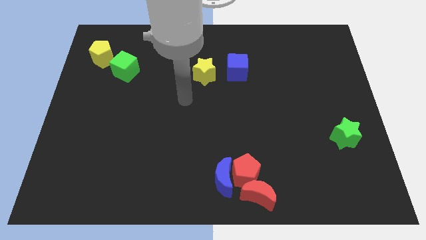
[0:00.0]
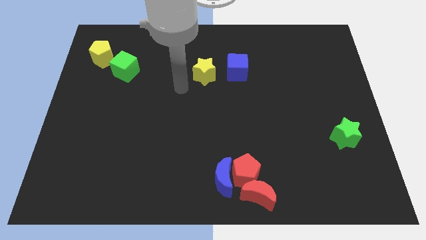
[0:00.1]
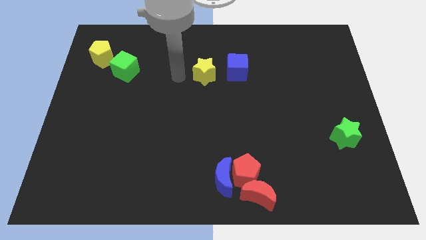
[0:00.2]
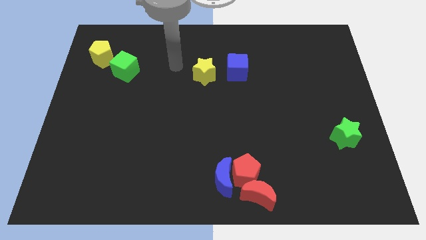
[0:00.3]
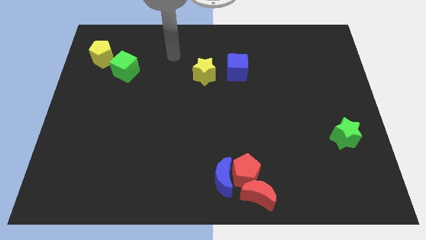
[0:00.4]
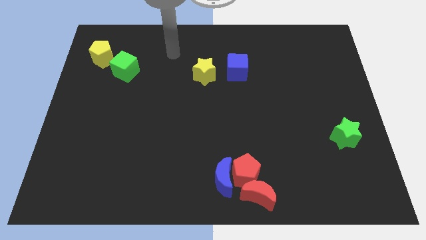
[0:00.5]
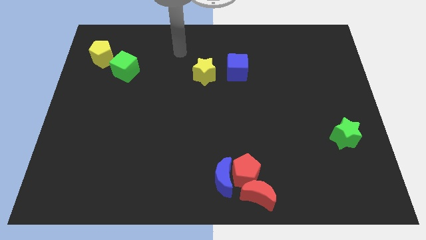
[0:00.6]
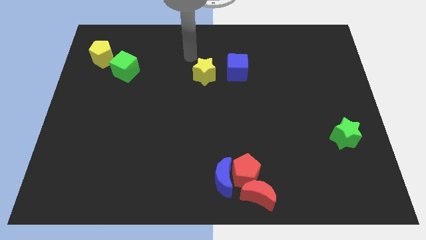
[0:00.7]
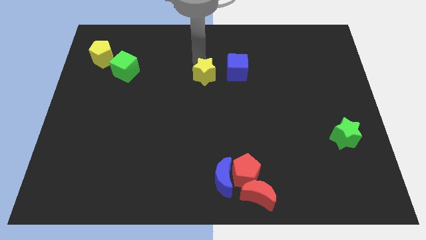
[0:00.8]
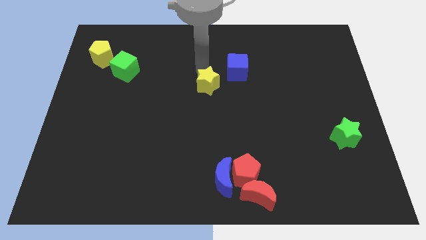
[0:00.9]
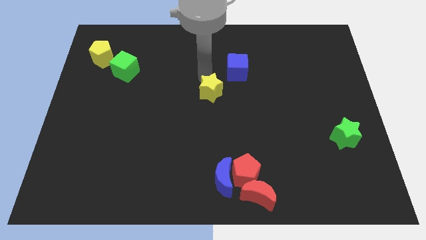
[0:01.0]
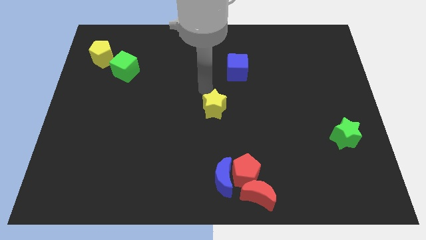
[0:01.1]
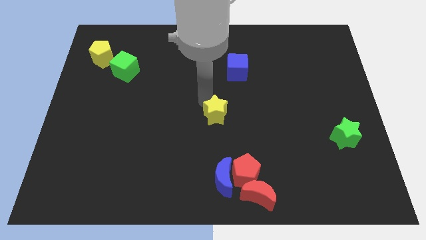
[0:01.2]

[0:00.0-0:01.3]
place a yellow star to the center of the board

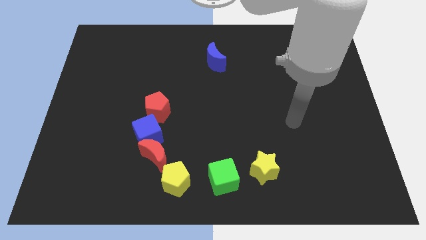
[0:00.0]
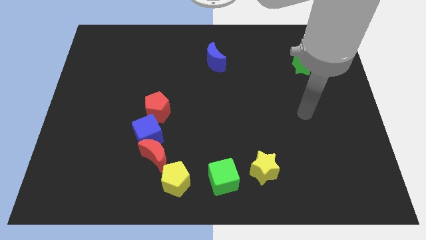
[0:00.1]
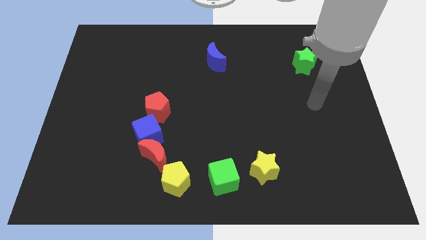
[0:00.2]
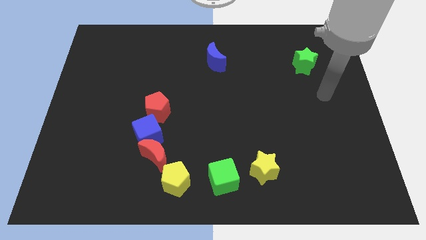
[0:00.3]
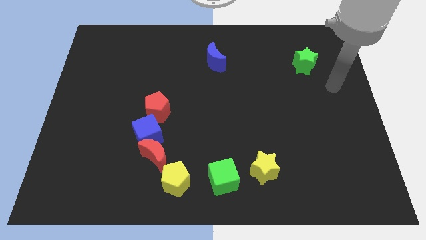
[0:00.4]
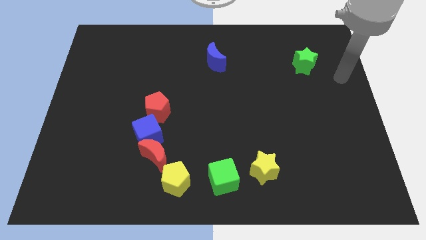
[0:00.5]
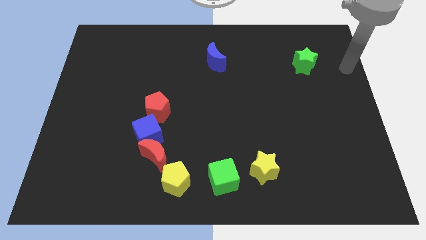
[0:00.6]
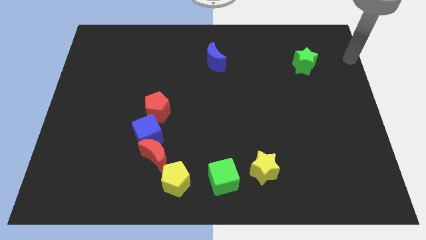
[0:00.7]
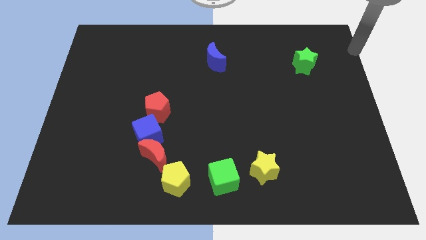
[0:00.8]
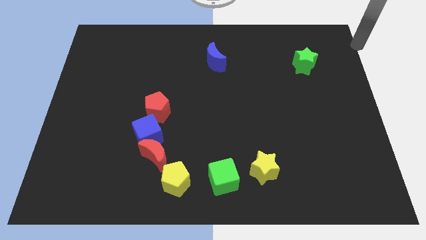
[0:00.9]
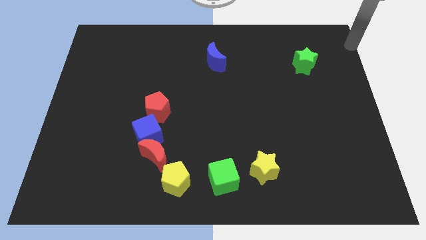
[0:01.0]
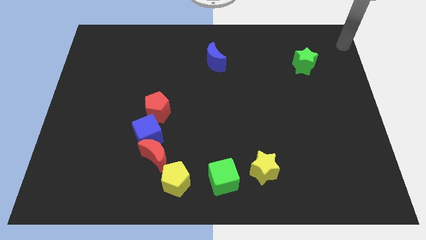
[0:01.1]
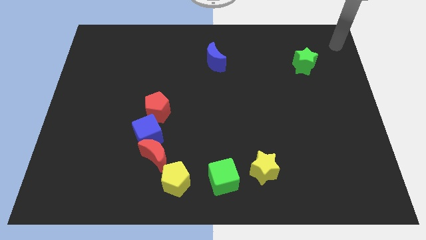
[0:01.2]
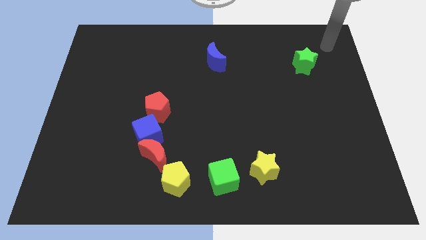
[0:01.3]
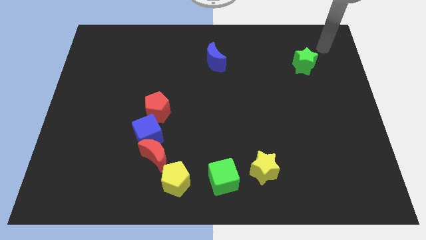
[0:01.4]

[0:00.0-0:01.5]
move your arm away from the yellow star

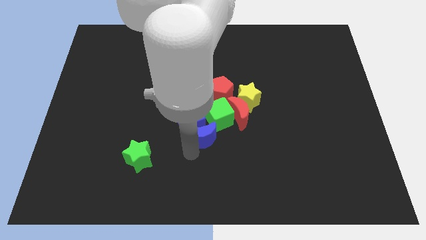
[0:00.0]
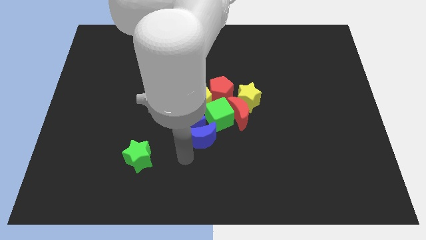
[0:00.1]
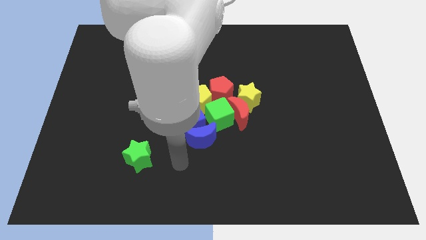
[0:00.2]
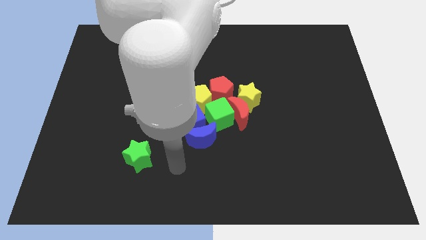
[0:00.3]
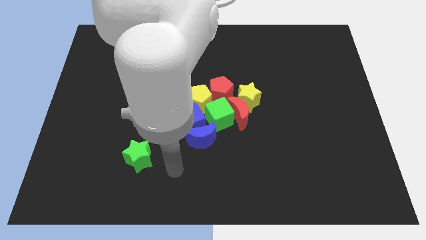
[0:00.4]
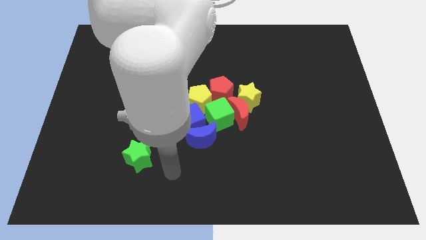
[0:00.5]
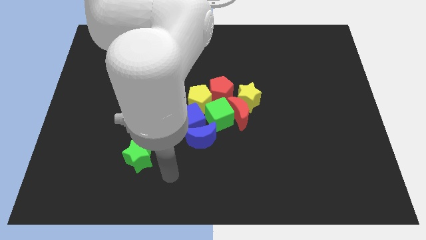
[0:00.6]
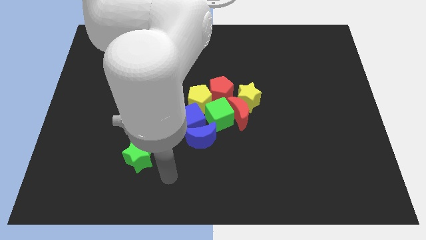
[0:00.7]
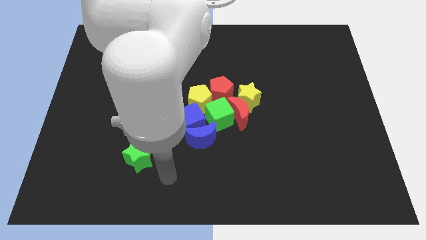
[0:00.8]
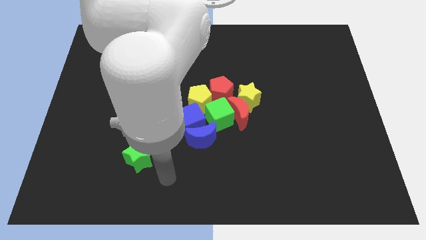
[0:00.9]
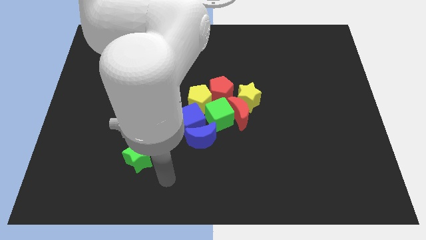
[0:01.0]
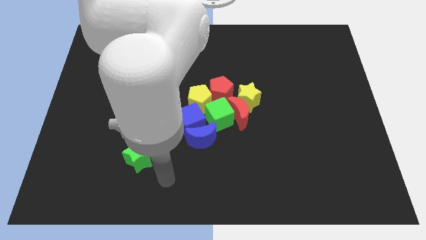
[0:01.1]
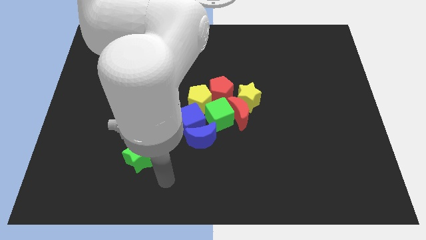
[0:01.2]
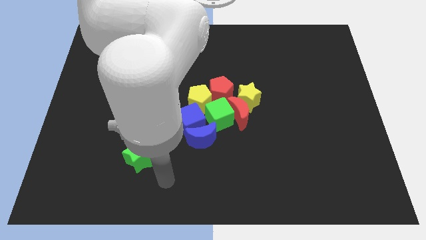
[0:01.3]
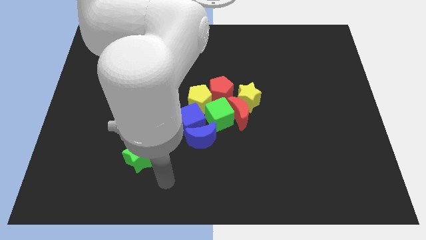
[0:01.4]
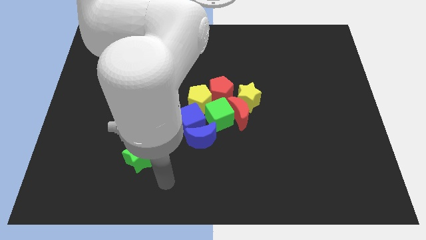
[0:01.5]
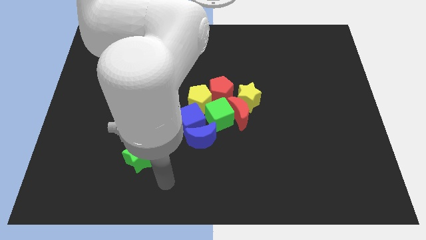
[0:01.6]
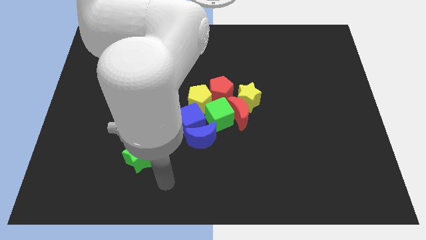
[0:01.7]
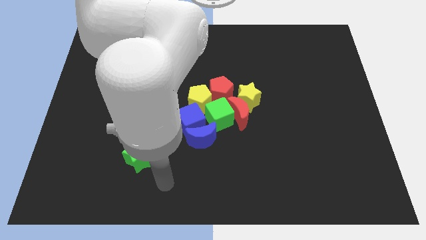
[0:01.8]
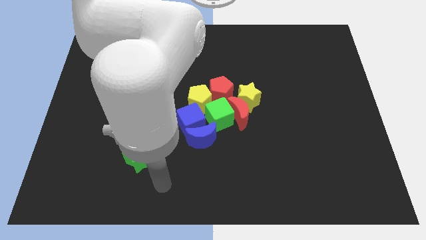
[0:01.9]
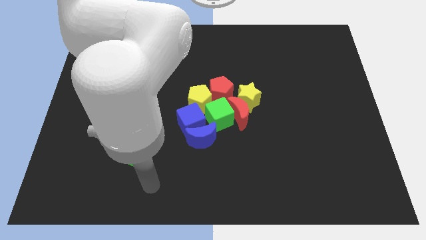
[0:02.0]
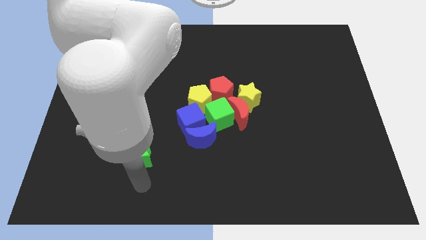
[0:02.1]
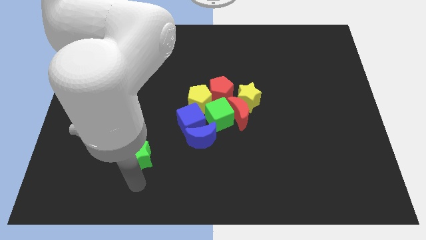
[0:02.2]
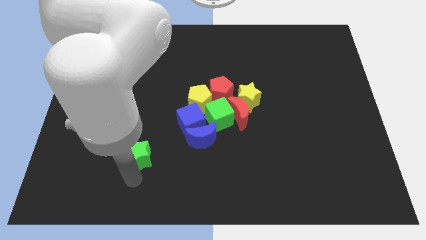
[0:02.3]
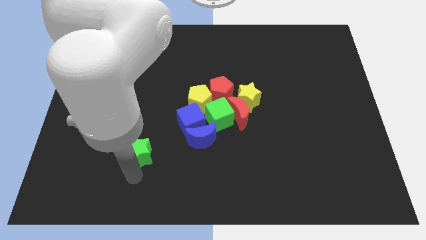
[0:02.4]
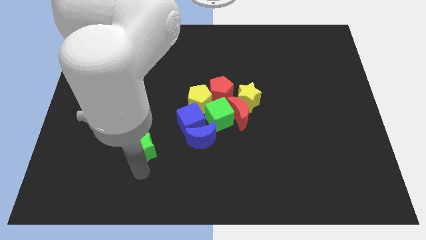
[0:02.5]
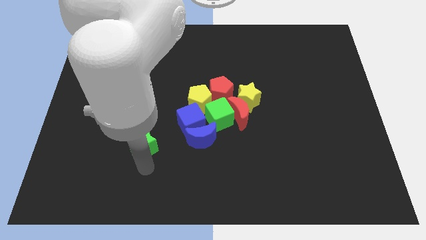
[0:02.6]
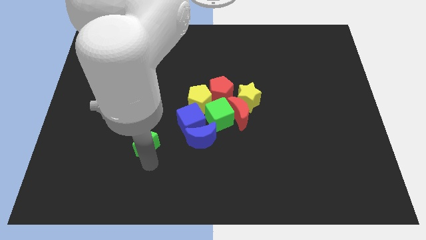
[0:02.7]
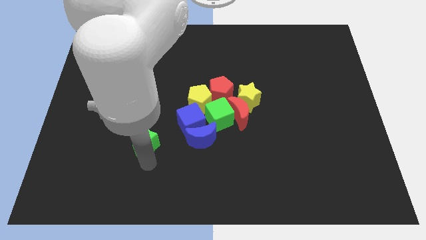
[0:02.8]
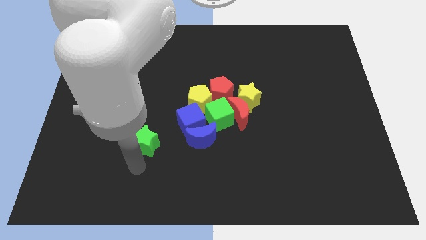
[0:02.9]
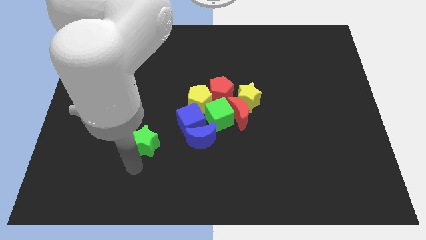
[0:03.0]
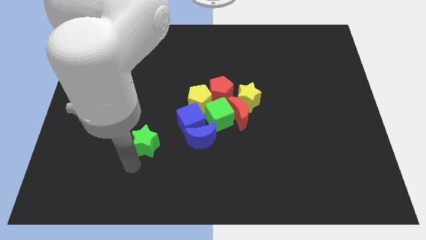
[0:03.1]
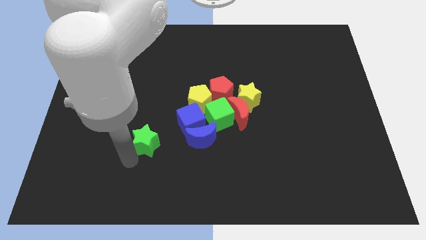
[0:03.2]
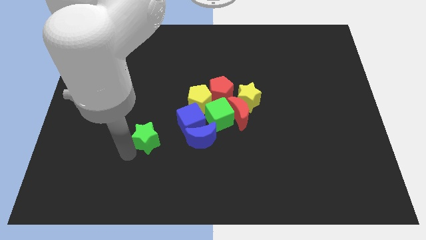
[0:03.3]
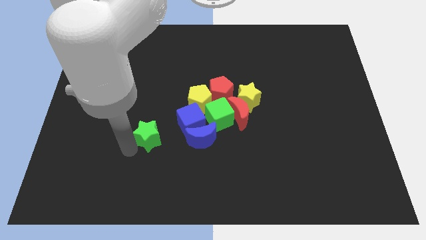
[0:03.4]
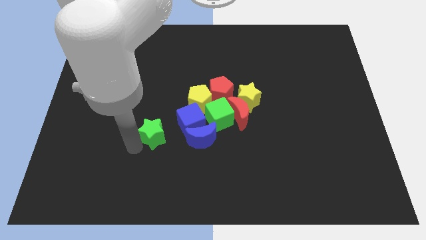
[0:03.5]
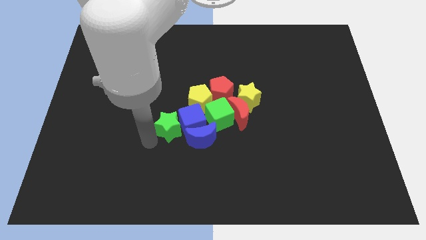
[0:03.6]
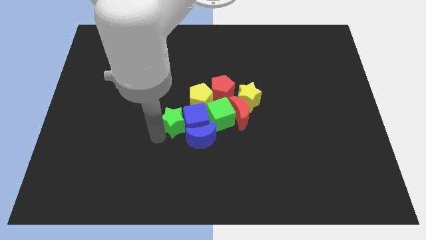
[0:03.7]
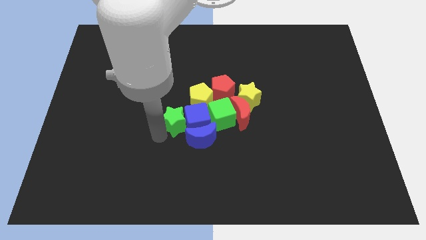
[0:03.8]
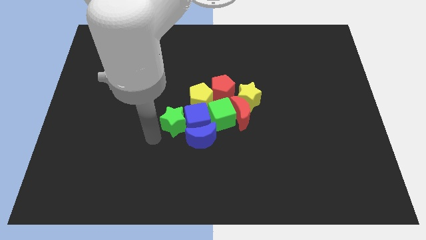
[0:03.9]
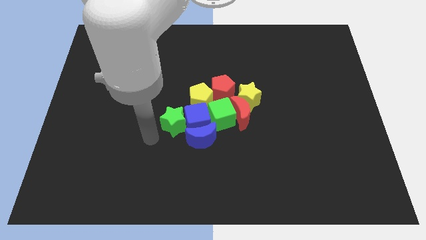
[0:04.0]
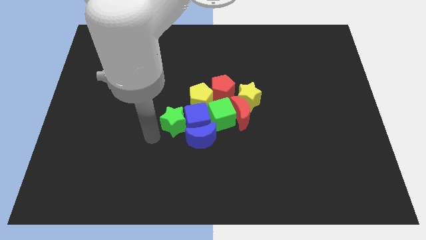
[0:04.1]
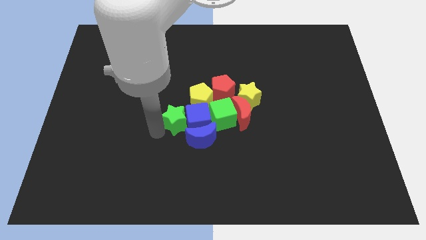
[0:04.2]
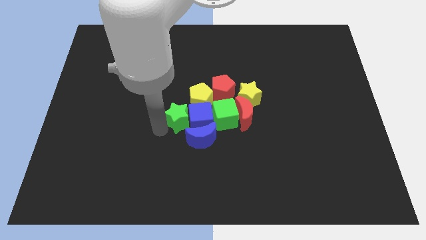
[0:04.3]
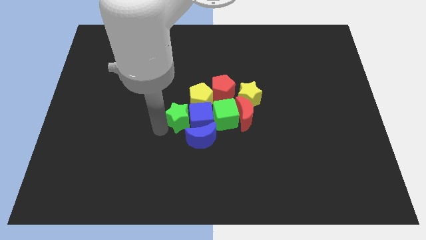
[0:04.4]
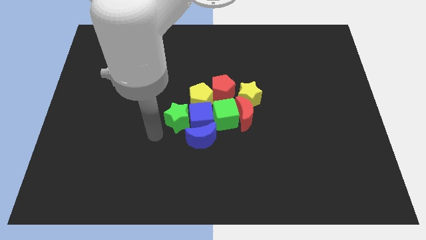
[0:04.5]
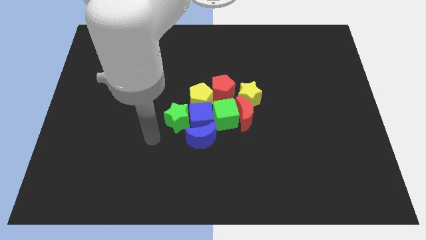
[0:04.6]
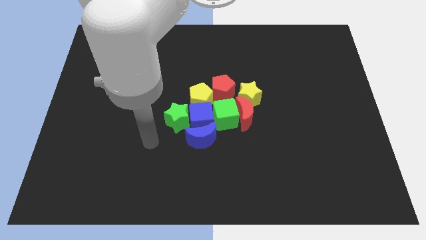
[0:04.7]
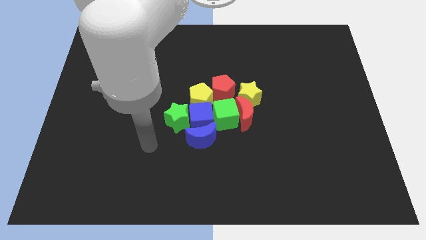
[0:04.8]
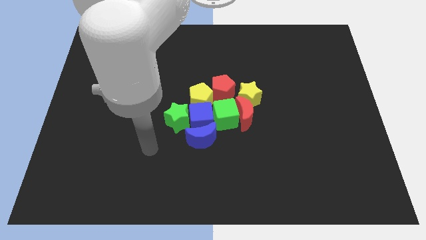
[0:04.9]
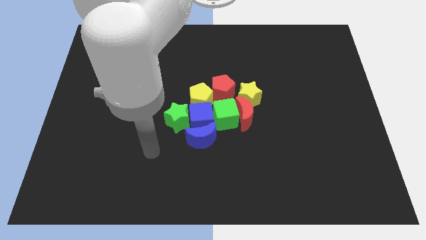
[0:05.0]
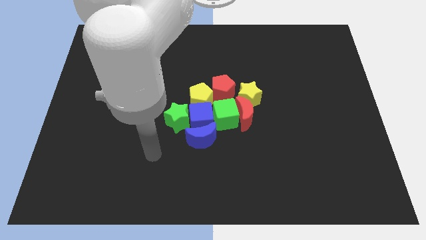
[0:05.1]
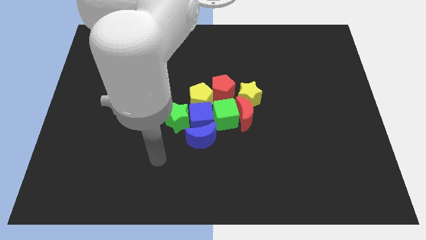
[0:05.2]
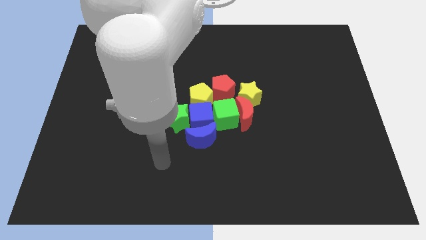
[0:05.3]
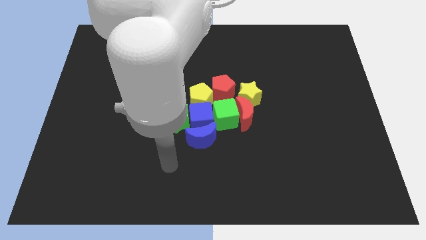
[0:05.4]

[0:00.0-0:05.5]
slide the green star slightly towards the group of blocks

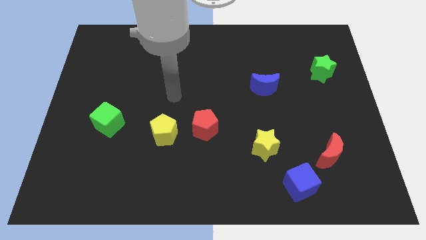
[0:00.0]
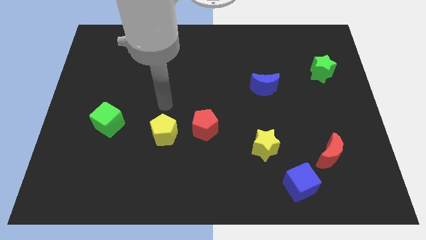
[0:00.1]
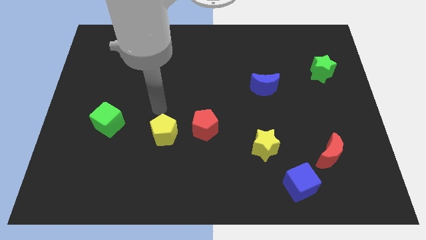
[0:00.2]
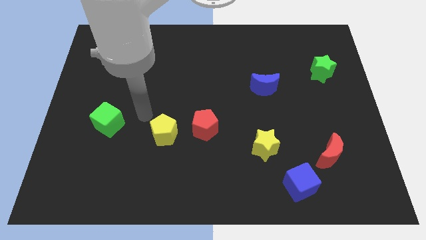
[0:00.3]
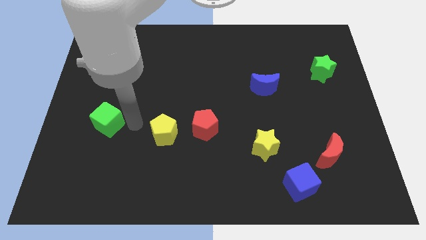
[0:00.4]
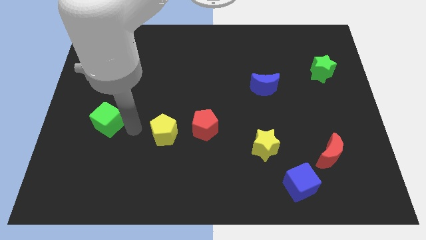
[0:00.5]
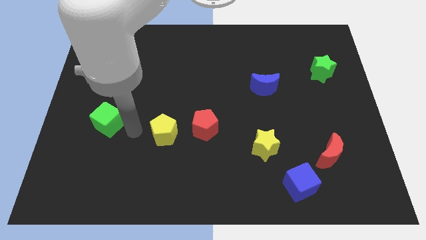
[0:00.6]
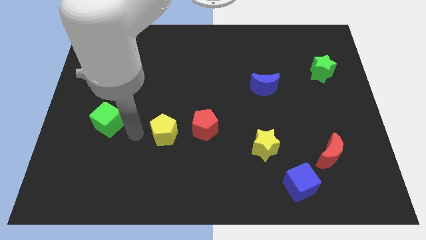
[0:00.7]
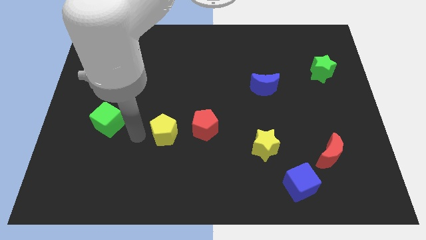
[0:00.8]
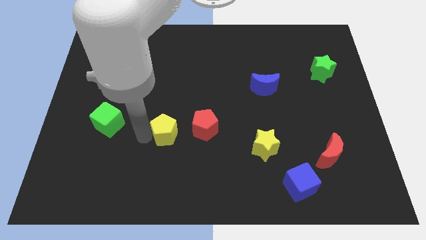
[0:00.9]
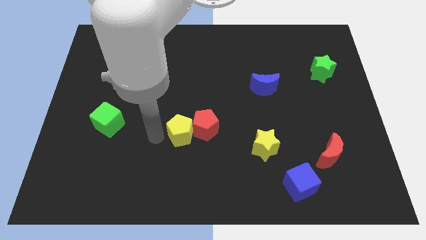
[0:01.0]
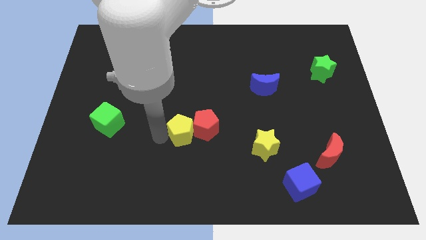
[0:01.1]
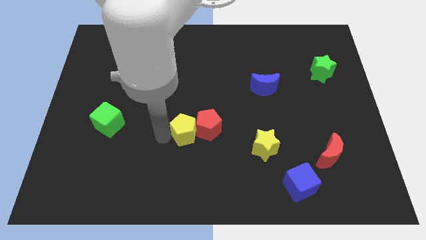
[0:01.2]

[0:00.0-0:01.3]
push yellow pentagon in to red pentagon
